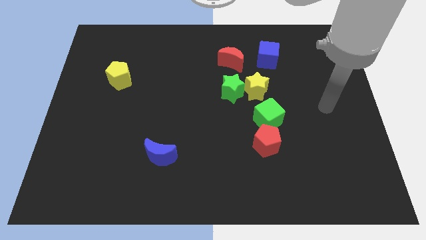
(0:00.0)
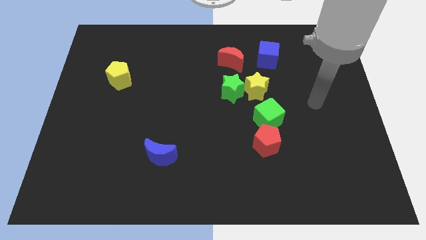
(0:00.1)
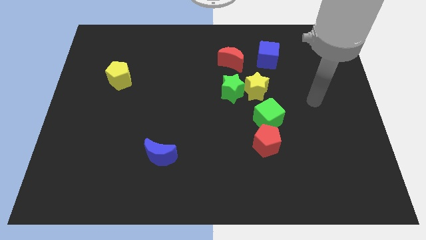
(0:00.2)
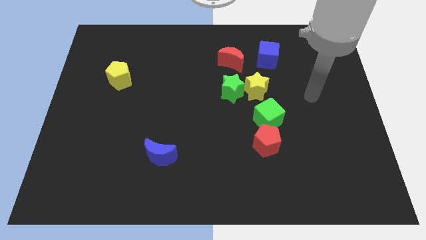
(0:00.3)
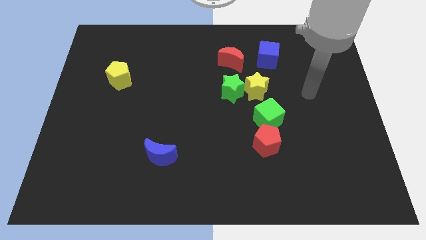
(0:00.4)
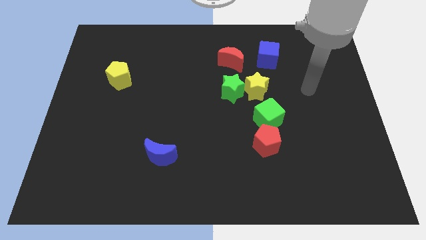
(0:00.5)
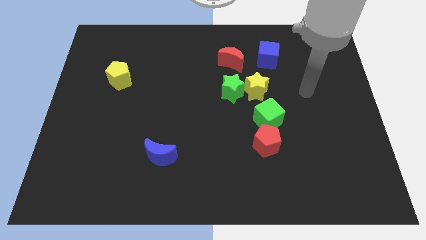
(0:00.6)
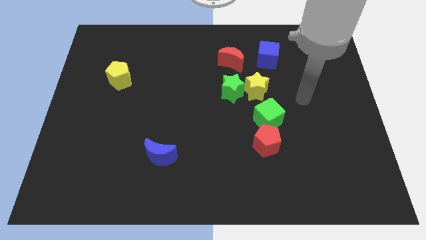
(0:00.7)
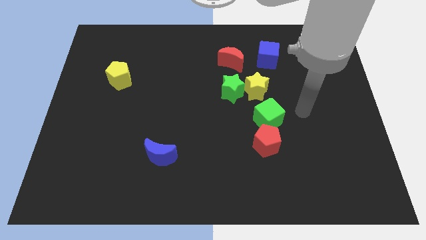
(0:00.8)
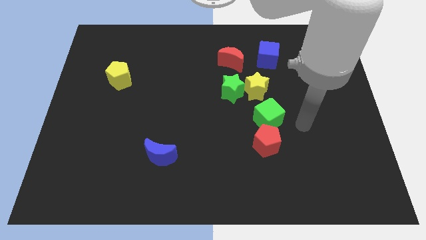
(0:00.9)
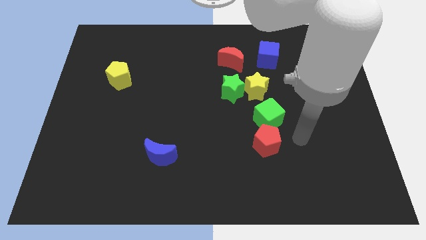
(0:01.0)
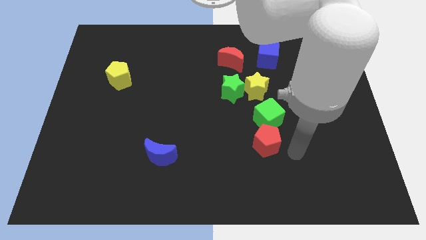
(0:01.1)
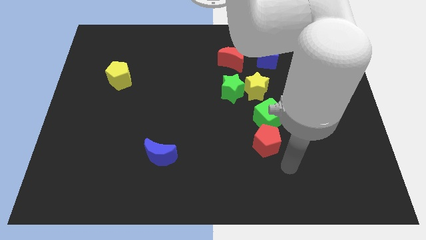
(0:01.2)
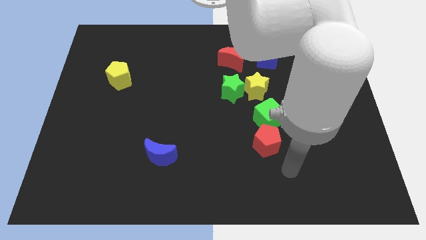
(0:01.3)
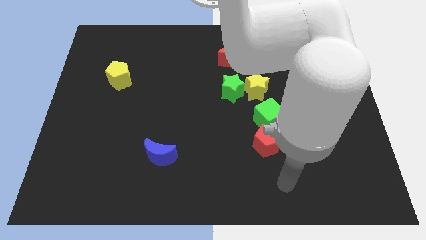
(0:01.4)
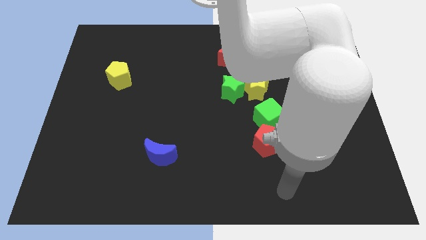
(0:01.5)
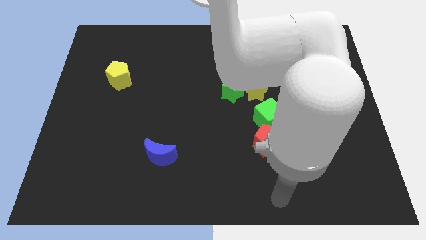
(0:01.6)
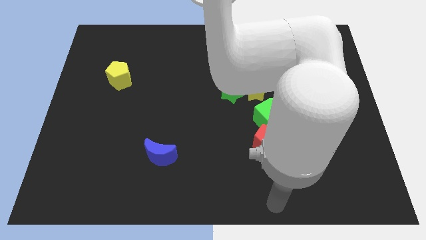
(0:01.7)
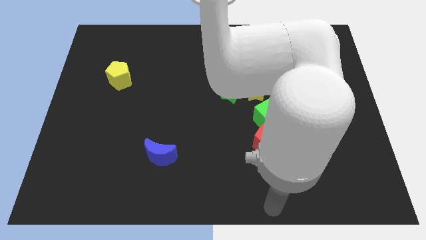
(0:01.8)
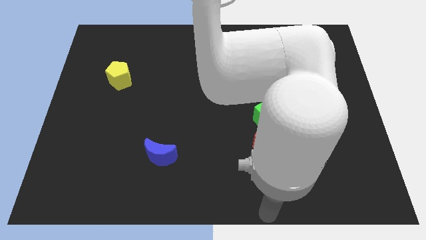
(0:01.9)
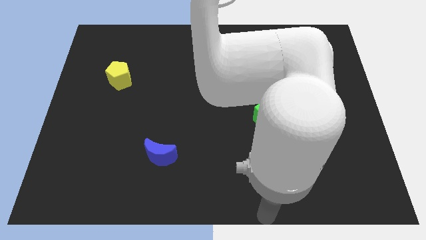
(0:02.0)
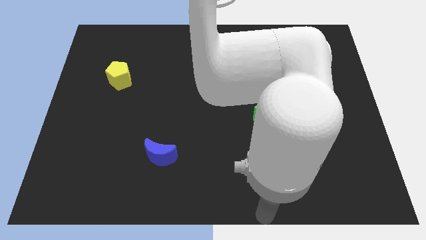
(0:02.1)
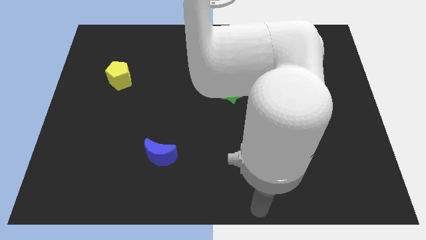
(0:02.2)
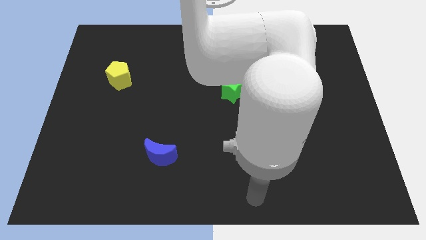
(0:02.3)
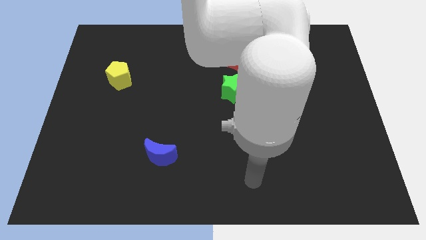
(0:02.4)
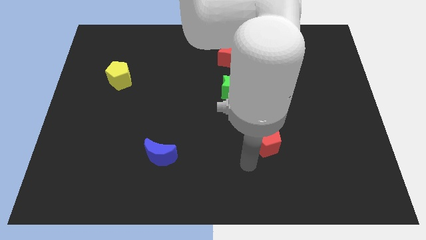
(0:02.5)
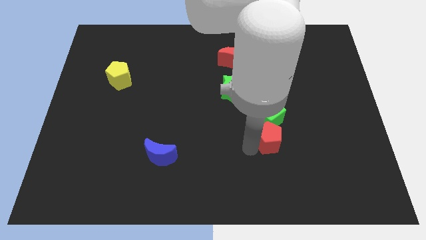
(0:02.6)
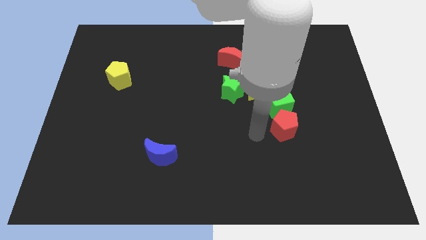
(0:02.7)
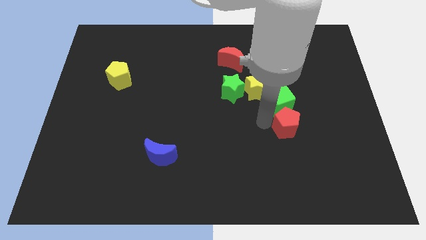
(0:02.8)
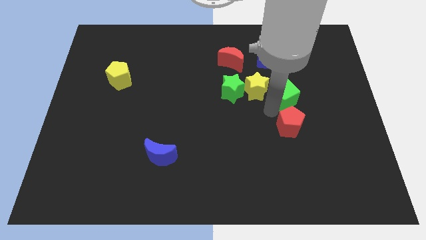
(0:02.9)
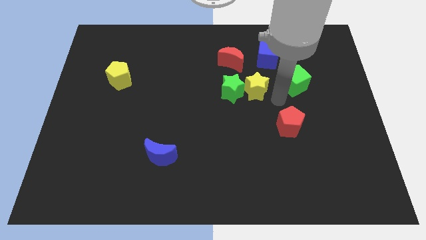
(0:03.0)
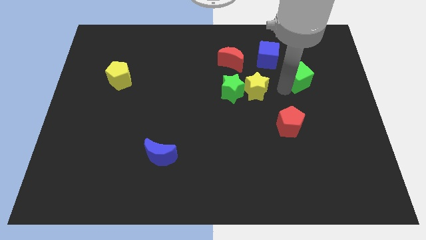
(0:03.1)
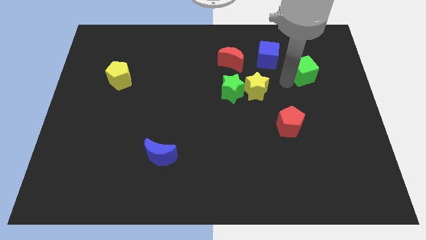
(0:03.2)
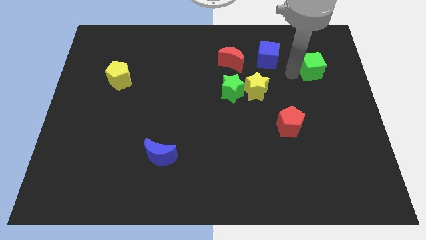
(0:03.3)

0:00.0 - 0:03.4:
separate the green cube from the red penatgon

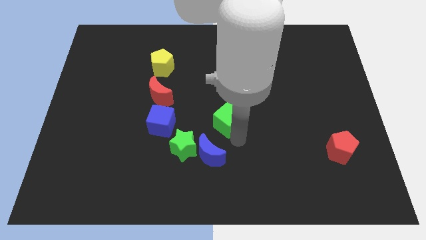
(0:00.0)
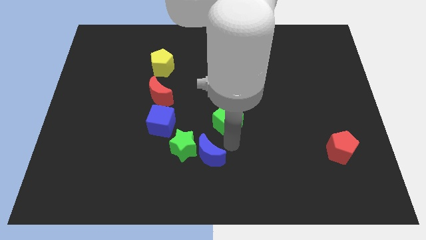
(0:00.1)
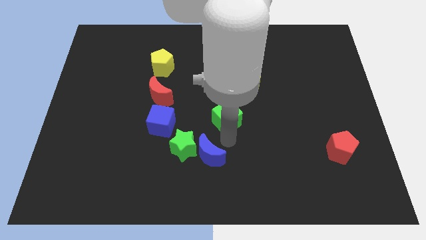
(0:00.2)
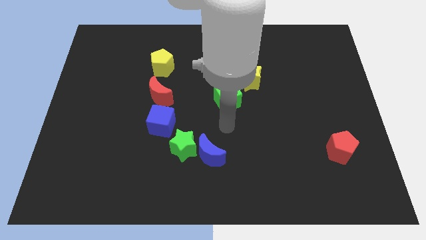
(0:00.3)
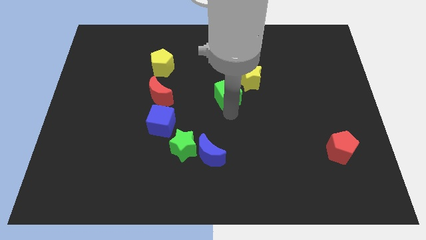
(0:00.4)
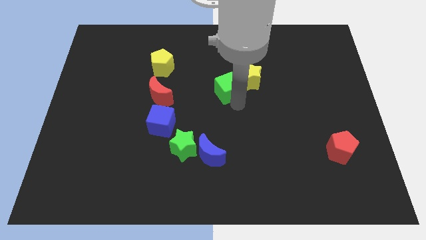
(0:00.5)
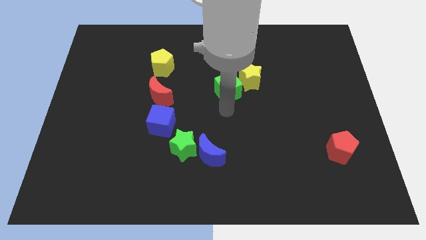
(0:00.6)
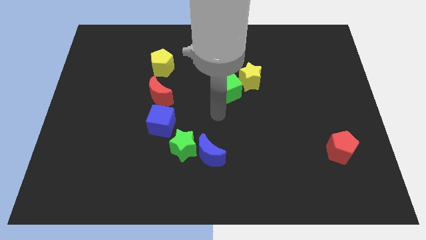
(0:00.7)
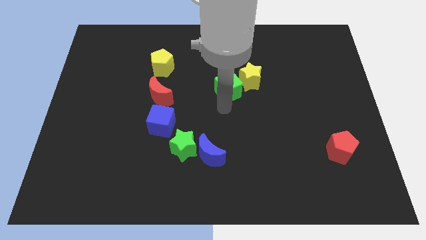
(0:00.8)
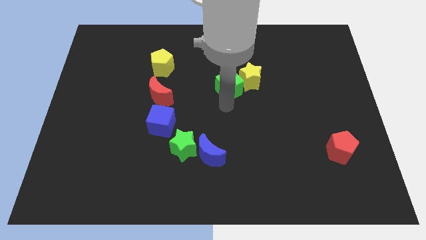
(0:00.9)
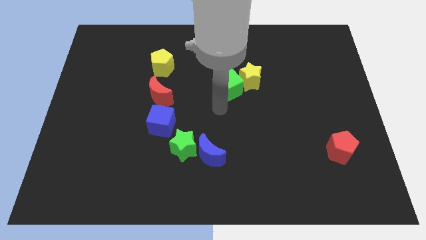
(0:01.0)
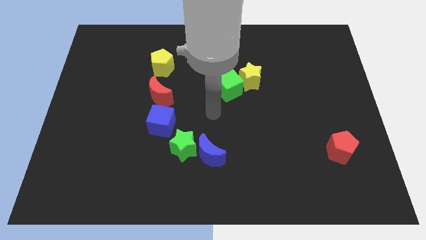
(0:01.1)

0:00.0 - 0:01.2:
push the green cube to the left of the yellow star

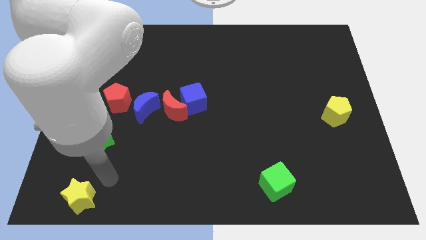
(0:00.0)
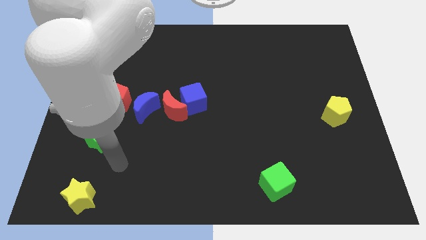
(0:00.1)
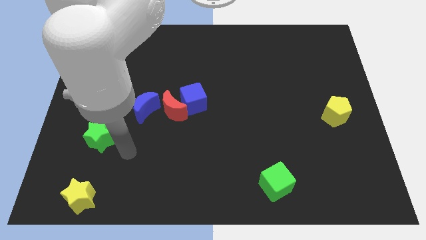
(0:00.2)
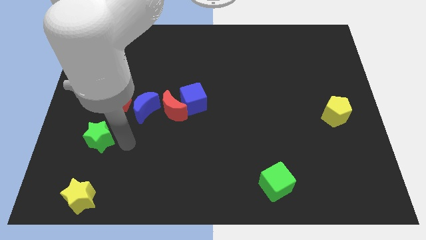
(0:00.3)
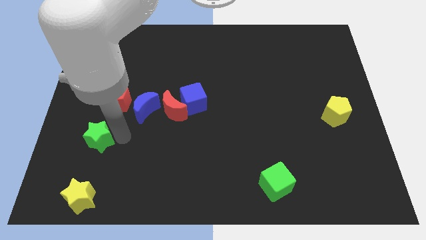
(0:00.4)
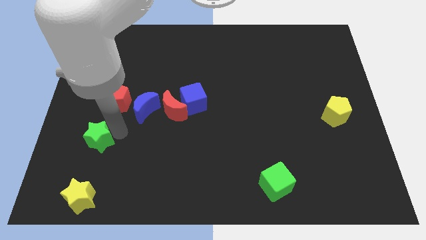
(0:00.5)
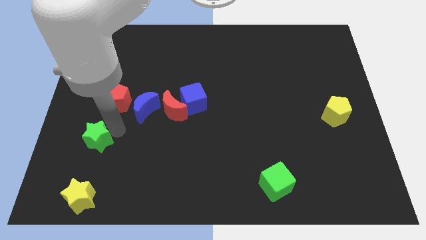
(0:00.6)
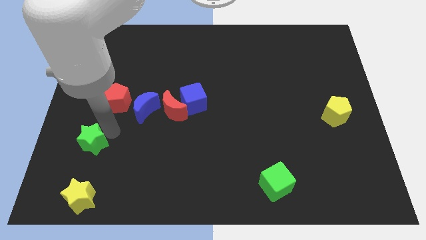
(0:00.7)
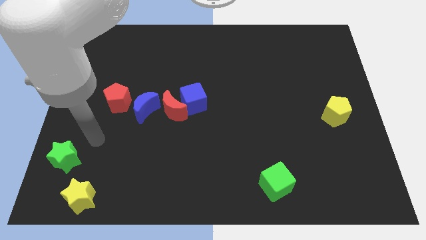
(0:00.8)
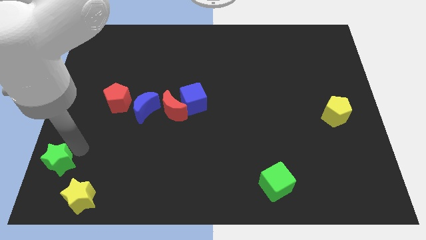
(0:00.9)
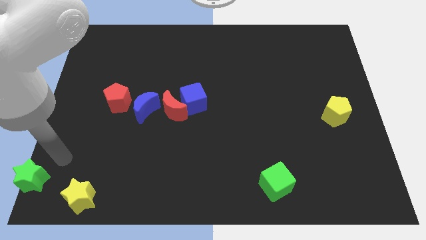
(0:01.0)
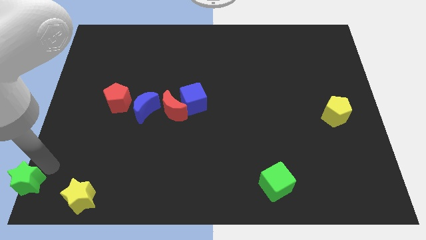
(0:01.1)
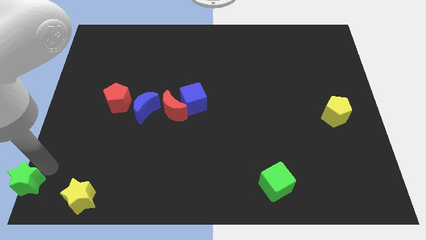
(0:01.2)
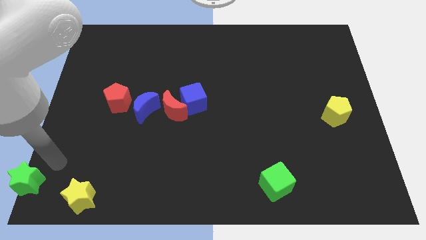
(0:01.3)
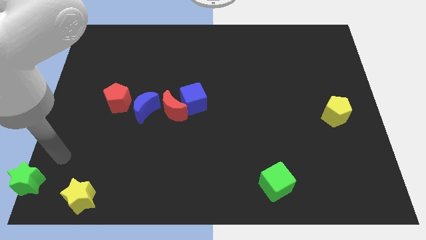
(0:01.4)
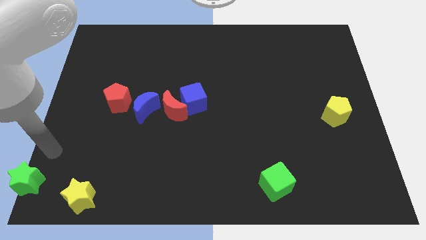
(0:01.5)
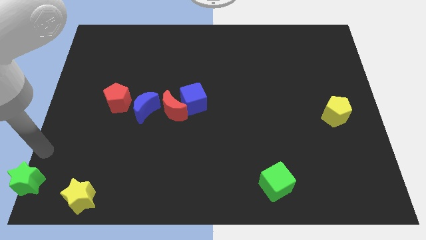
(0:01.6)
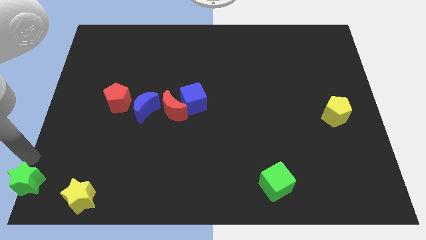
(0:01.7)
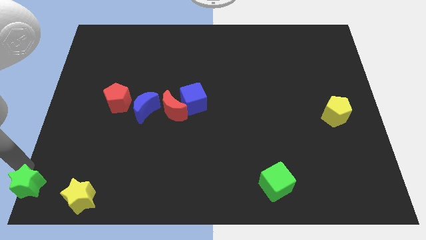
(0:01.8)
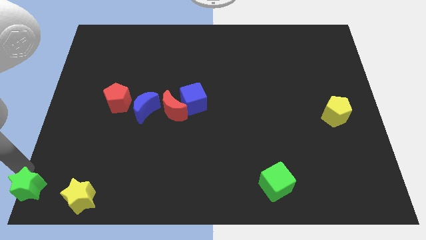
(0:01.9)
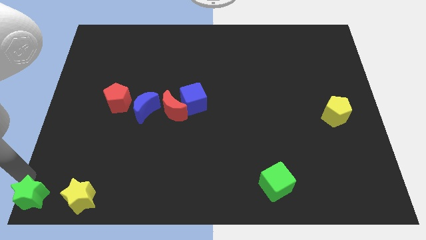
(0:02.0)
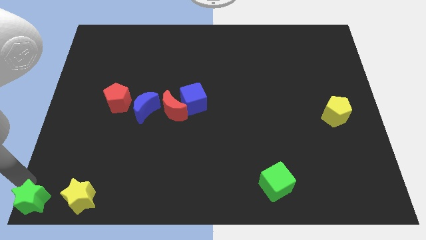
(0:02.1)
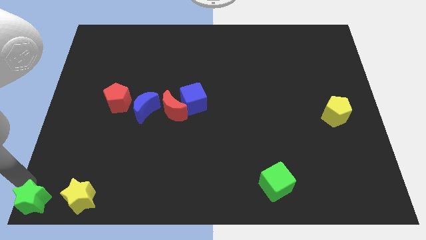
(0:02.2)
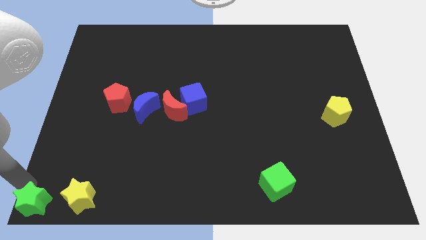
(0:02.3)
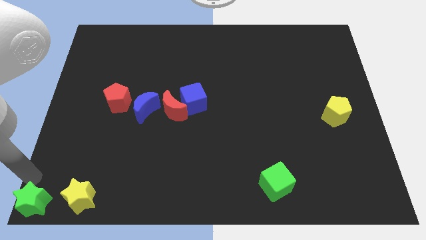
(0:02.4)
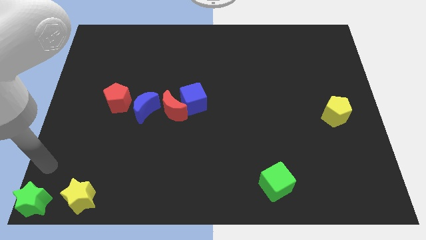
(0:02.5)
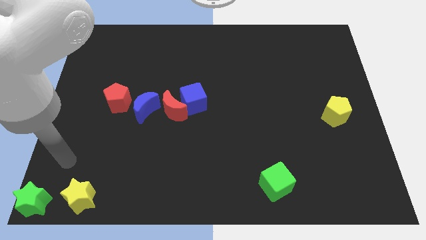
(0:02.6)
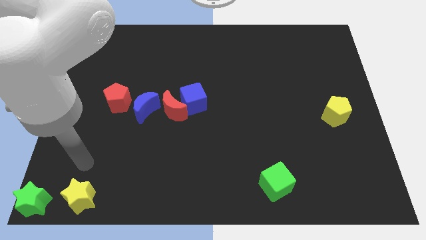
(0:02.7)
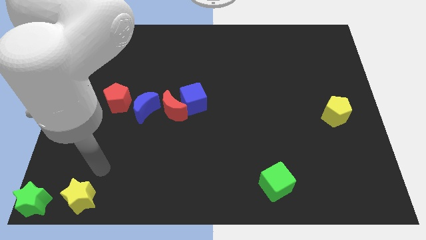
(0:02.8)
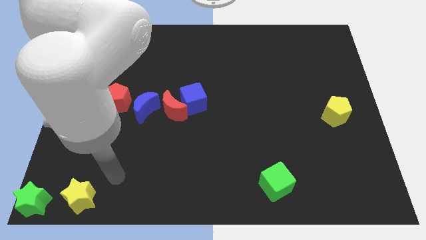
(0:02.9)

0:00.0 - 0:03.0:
push the green star to the bottom left corner of the board

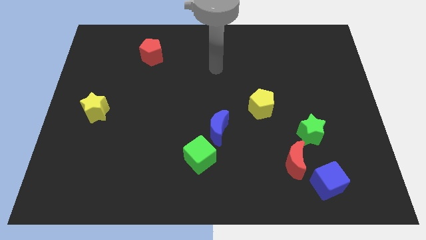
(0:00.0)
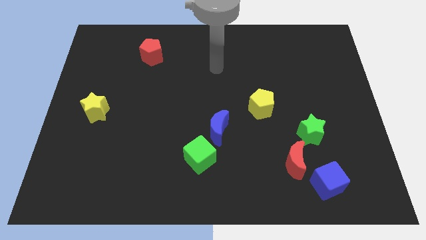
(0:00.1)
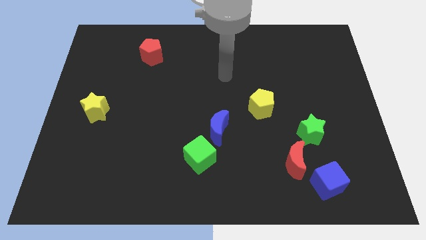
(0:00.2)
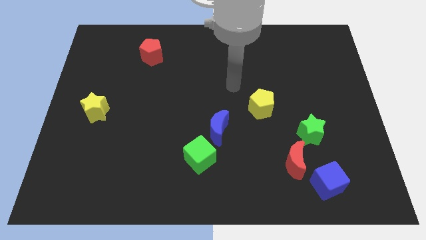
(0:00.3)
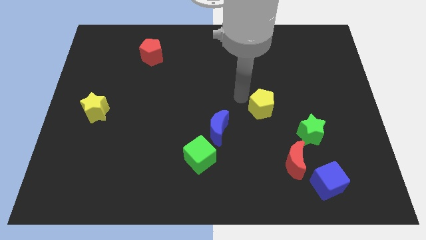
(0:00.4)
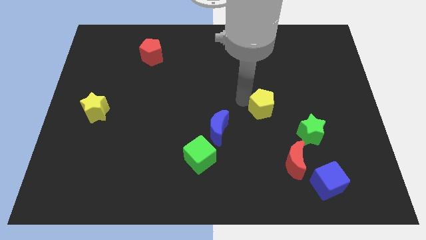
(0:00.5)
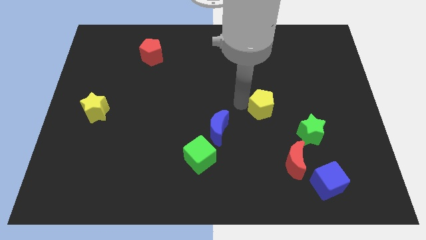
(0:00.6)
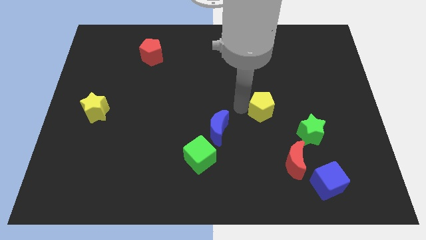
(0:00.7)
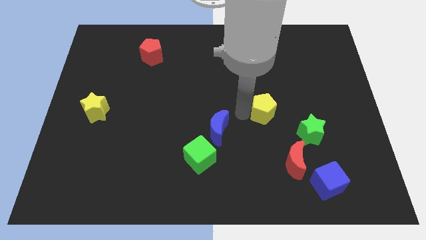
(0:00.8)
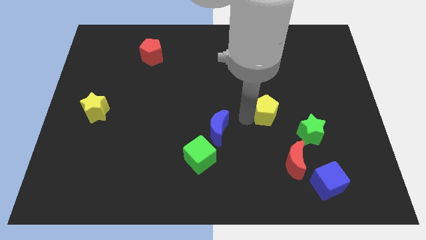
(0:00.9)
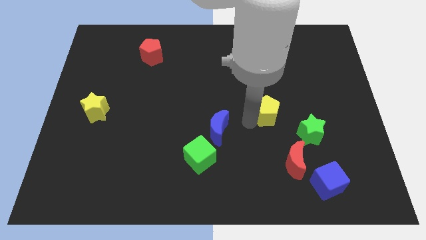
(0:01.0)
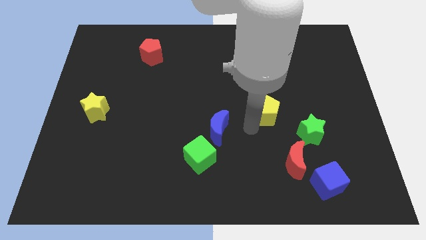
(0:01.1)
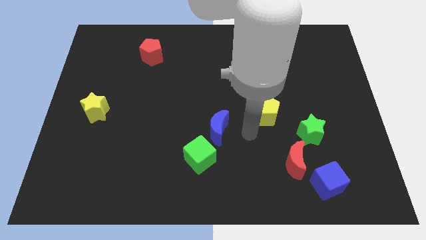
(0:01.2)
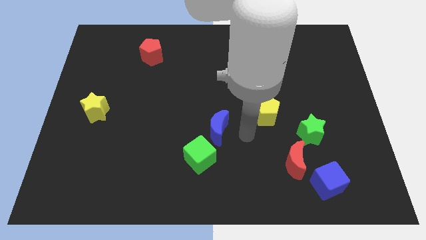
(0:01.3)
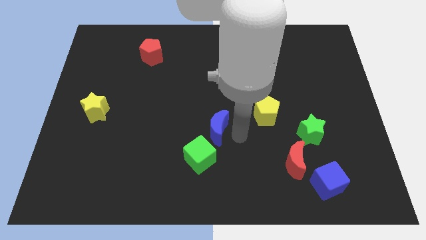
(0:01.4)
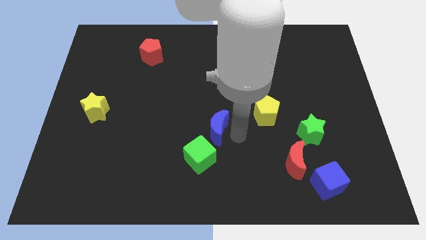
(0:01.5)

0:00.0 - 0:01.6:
slightly push the yellow pentagon towards the bottom side
